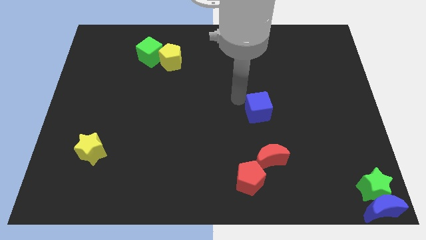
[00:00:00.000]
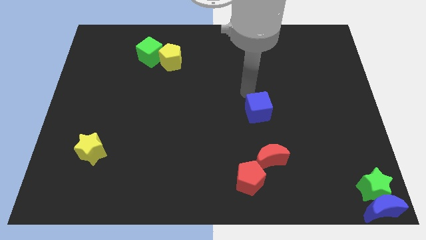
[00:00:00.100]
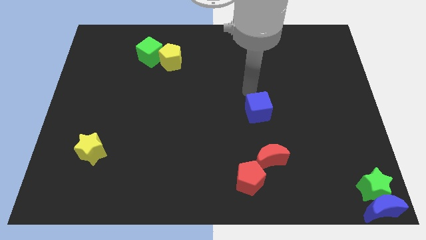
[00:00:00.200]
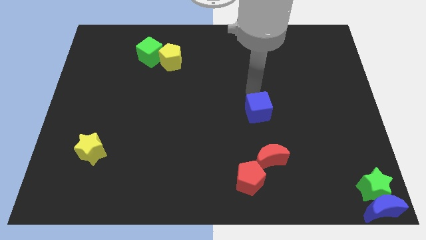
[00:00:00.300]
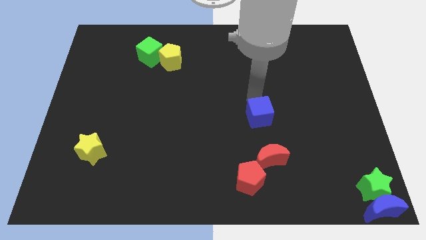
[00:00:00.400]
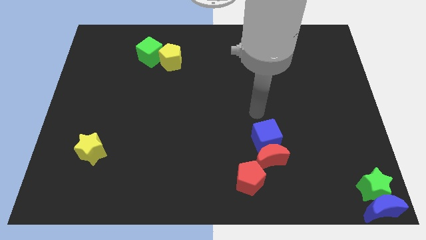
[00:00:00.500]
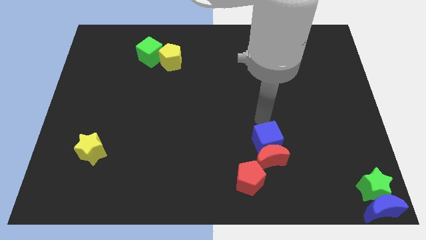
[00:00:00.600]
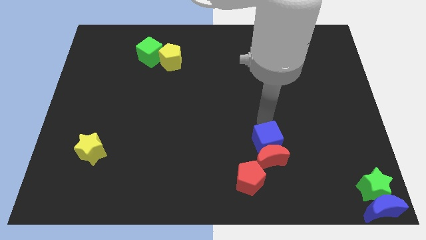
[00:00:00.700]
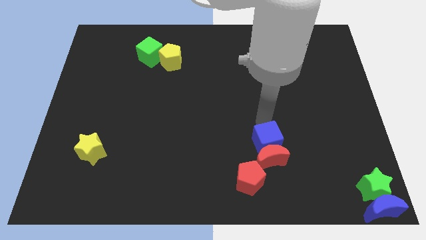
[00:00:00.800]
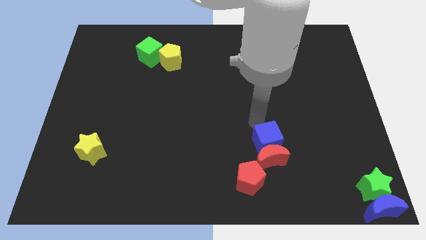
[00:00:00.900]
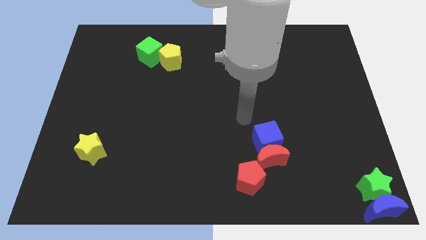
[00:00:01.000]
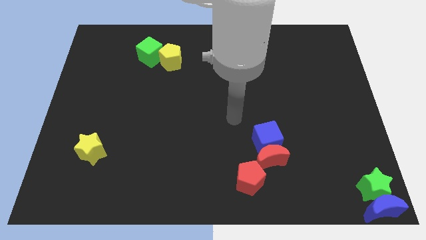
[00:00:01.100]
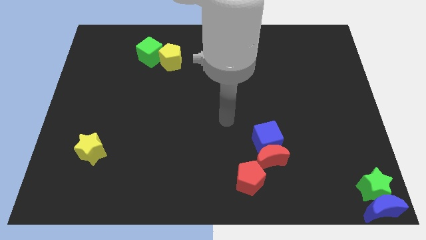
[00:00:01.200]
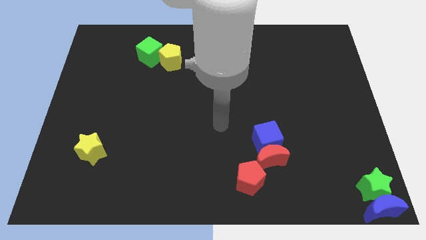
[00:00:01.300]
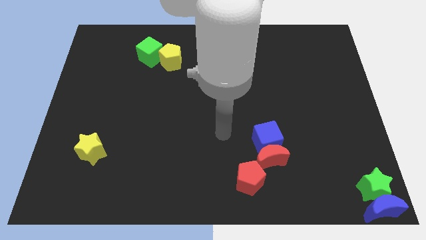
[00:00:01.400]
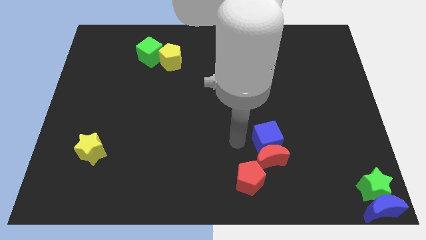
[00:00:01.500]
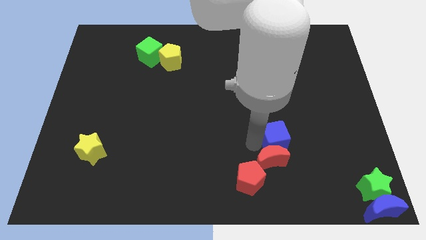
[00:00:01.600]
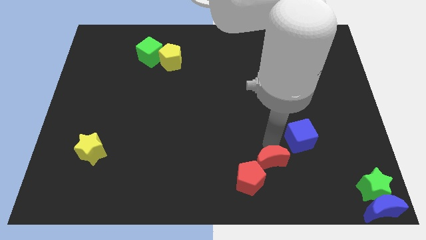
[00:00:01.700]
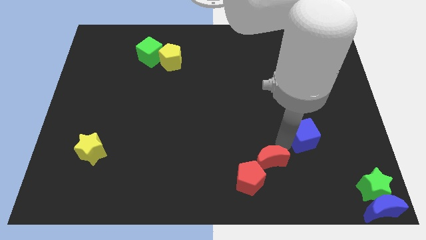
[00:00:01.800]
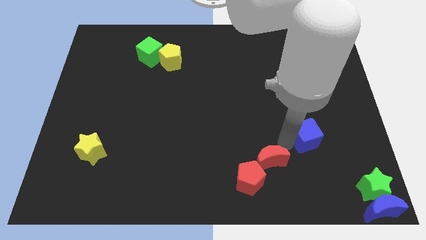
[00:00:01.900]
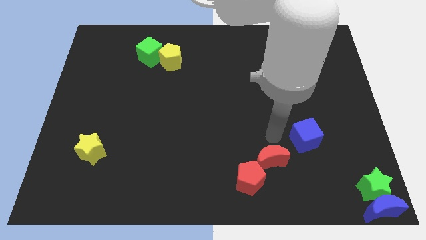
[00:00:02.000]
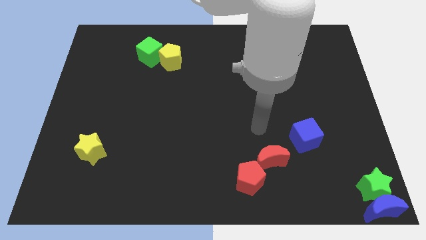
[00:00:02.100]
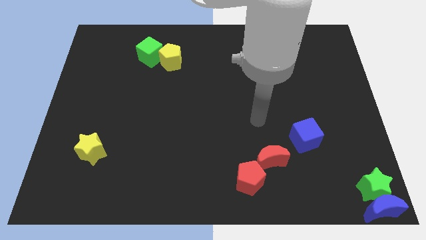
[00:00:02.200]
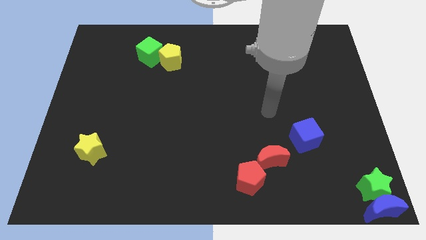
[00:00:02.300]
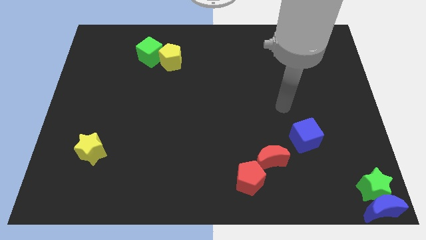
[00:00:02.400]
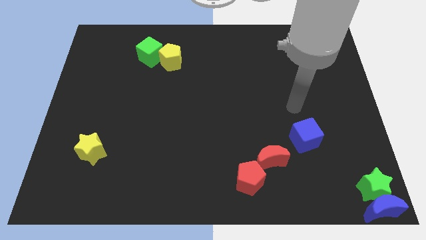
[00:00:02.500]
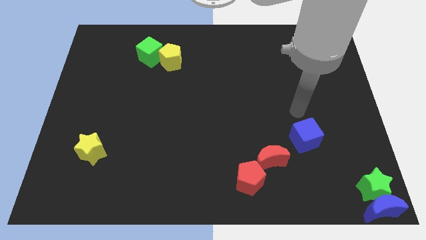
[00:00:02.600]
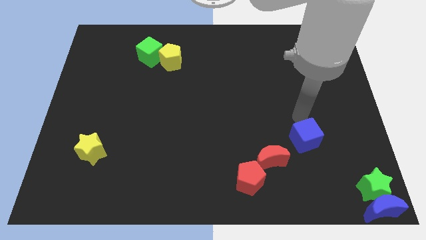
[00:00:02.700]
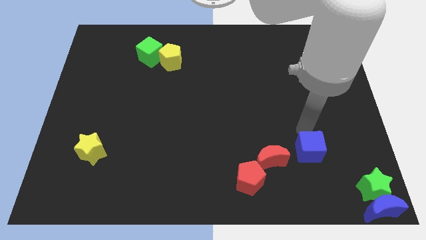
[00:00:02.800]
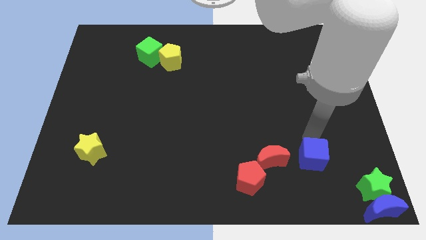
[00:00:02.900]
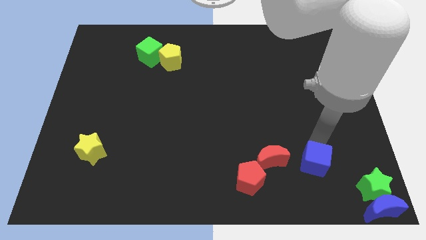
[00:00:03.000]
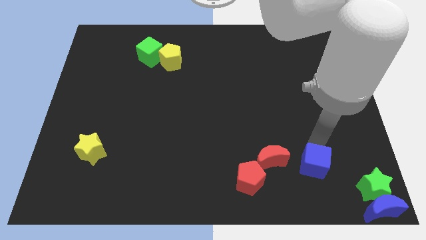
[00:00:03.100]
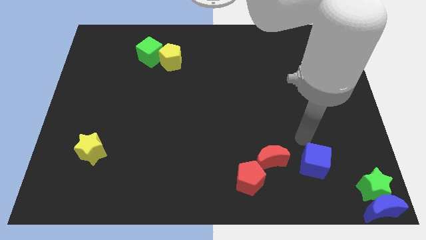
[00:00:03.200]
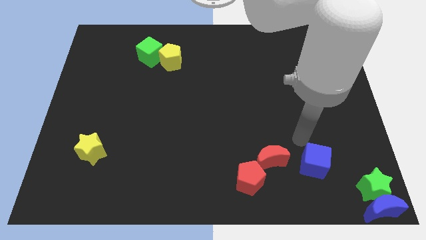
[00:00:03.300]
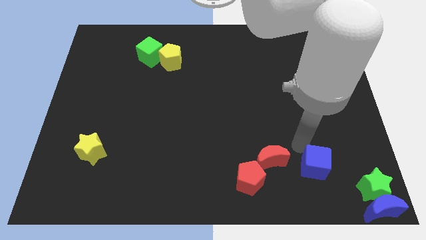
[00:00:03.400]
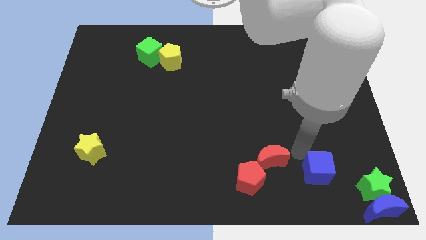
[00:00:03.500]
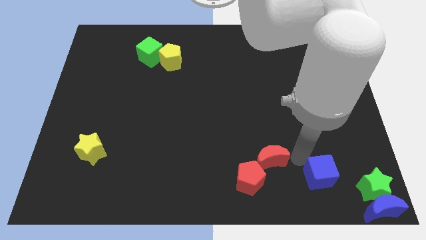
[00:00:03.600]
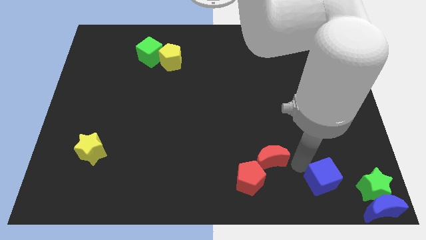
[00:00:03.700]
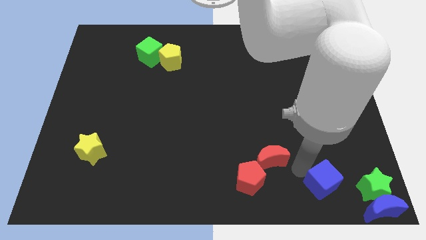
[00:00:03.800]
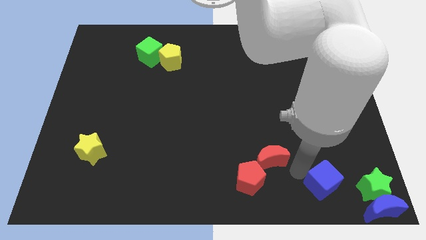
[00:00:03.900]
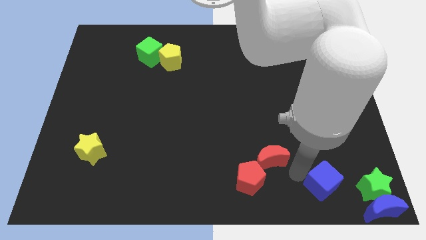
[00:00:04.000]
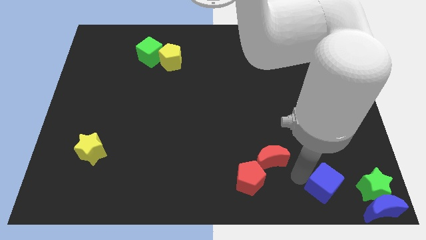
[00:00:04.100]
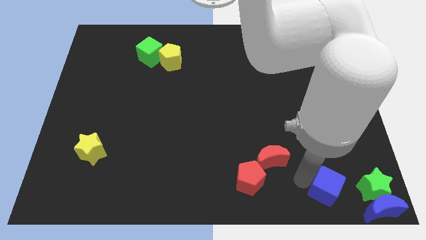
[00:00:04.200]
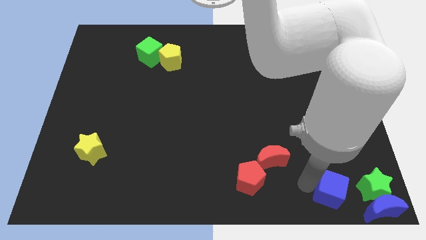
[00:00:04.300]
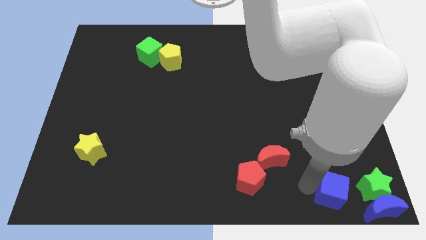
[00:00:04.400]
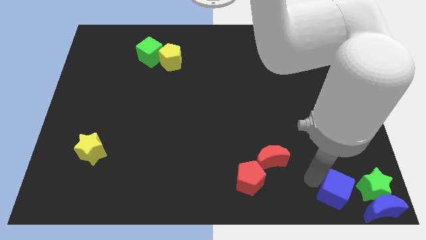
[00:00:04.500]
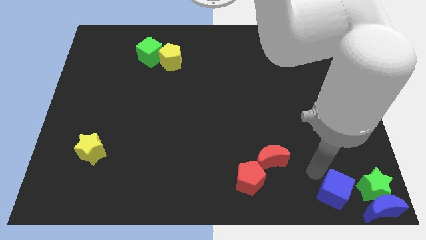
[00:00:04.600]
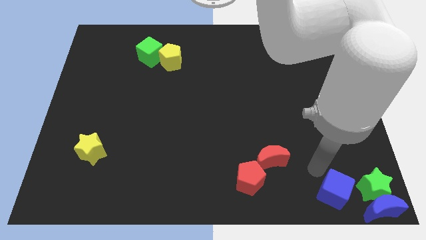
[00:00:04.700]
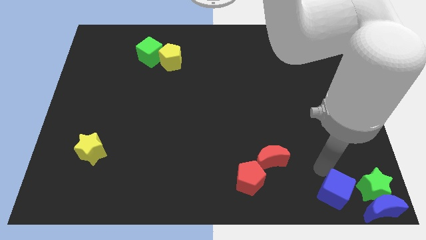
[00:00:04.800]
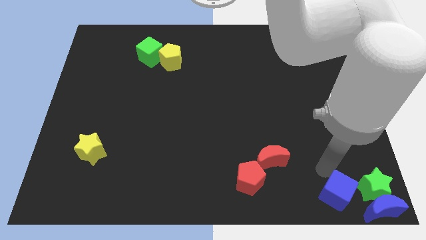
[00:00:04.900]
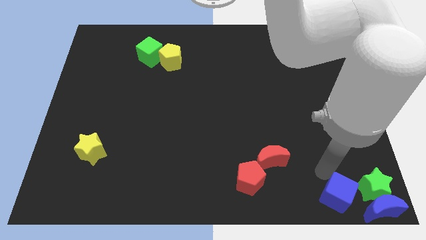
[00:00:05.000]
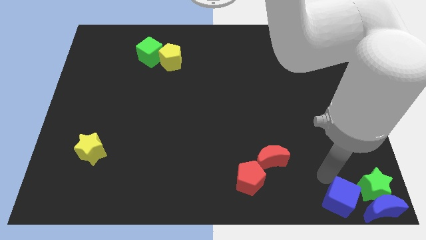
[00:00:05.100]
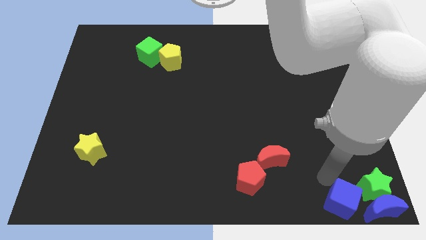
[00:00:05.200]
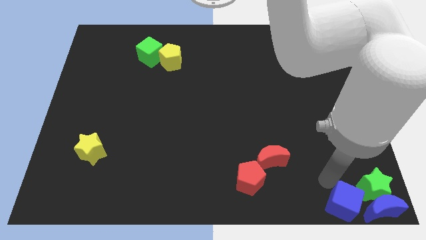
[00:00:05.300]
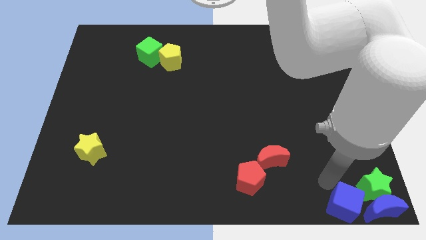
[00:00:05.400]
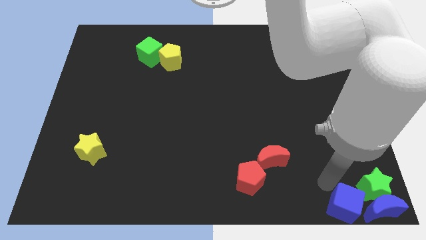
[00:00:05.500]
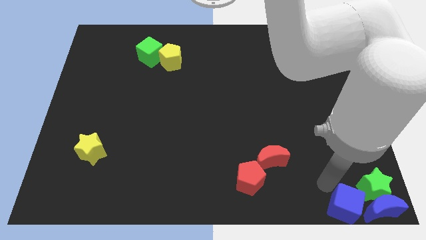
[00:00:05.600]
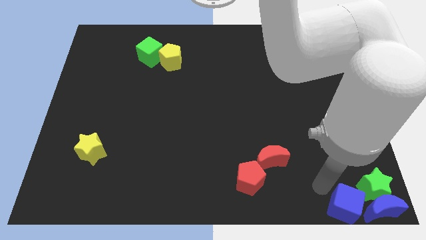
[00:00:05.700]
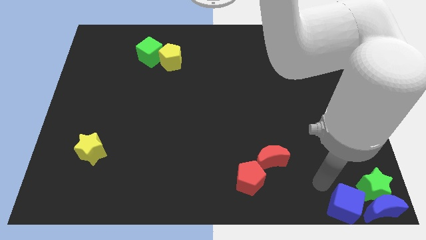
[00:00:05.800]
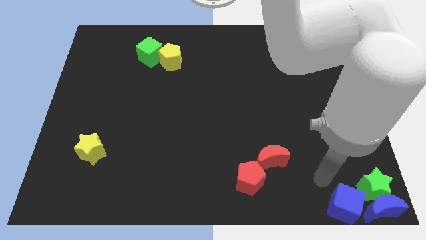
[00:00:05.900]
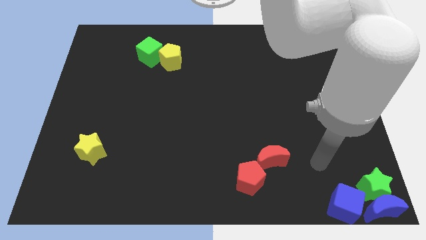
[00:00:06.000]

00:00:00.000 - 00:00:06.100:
put the blue cube towards the bottom right corner

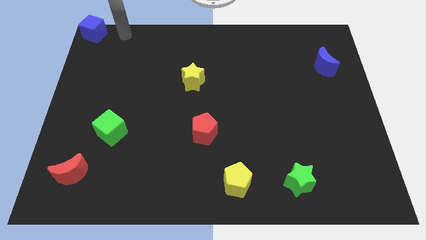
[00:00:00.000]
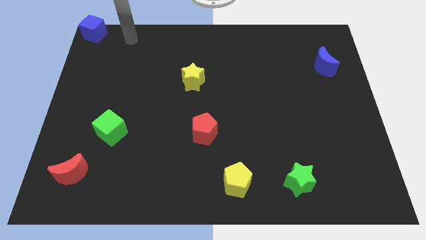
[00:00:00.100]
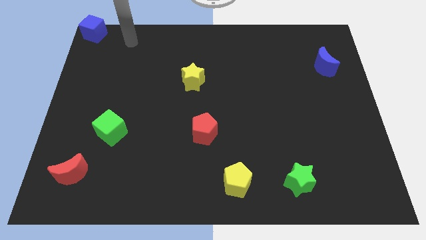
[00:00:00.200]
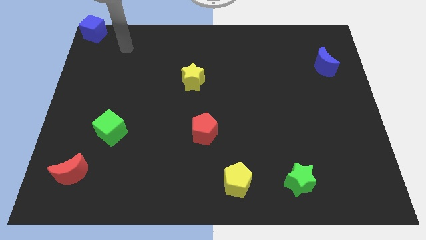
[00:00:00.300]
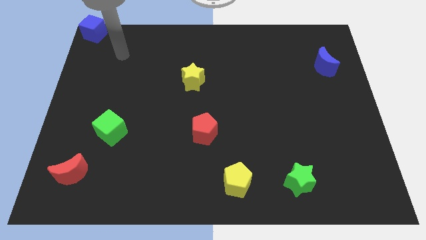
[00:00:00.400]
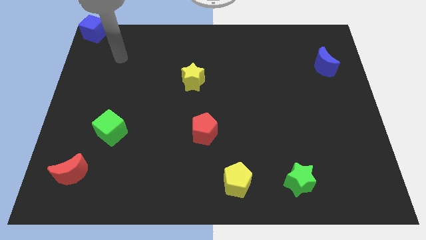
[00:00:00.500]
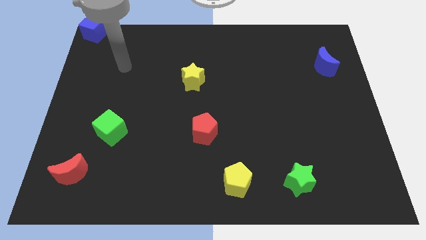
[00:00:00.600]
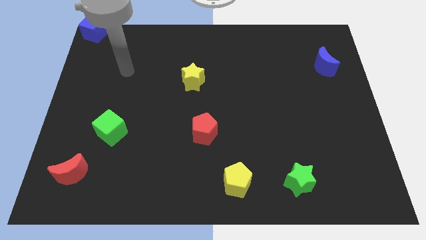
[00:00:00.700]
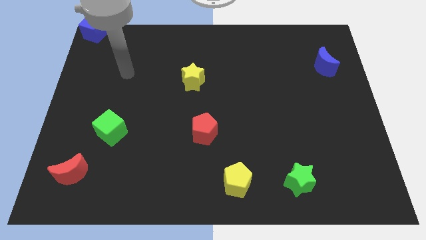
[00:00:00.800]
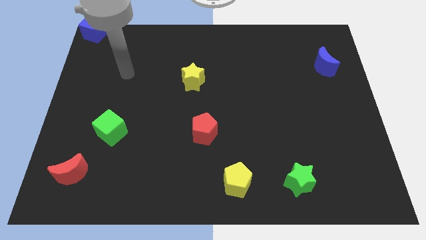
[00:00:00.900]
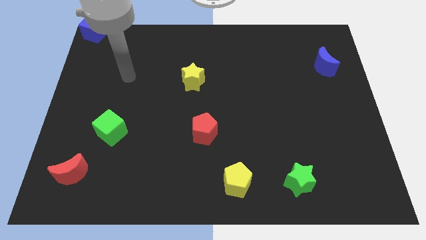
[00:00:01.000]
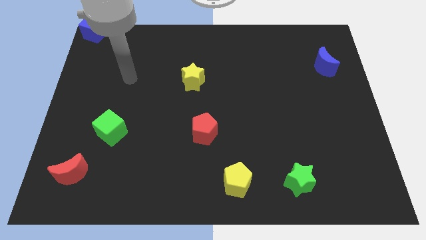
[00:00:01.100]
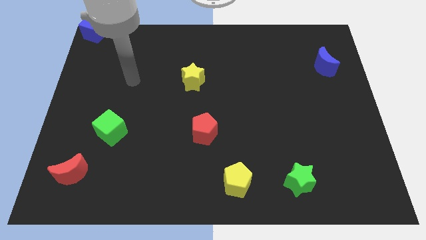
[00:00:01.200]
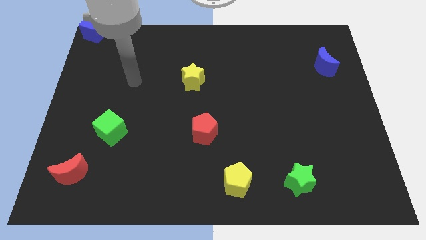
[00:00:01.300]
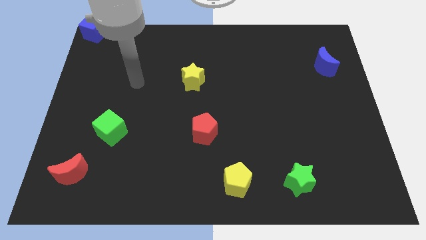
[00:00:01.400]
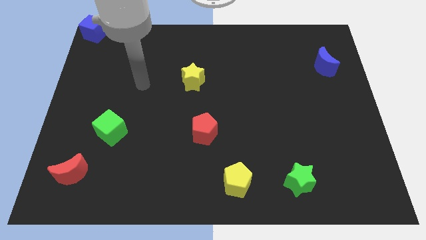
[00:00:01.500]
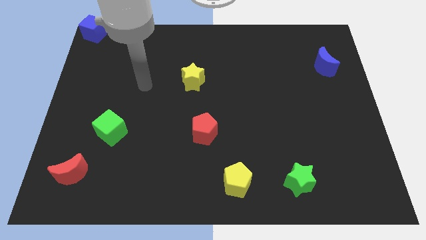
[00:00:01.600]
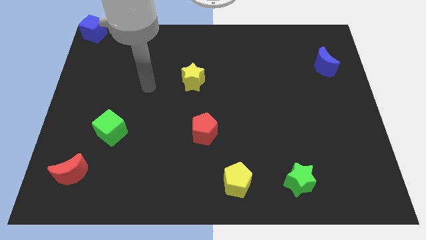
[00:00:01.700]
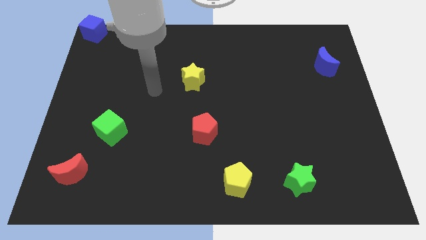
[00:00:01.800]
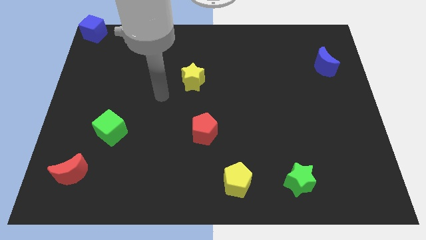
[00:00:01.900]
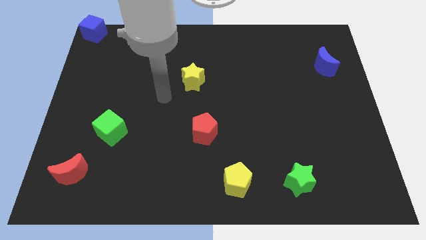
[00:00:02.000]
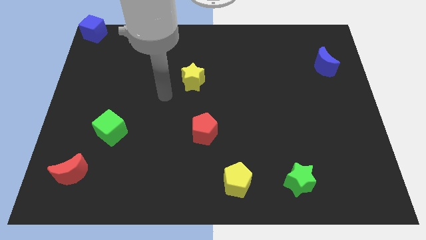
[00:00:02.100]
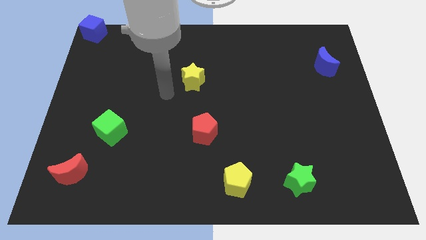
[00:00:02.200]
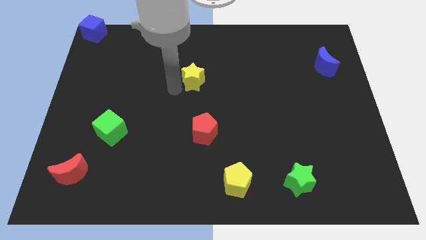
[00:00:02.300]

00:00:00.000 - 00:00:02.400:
point the arm at the left side of the yellow star

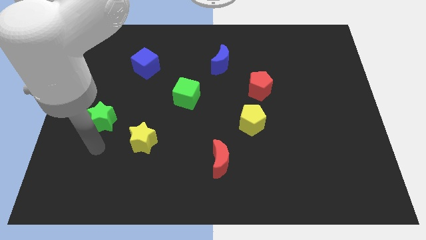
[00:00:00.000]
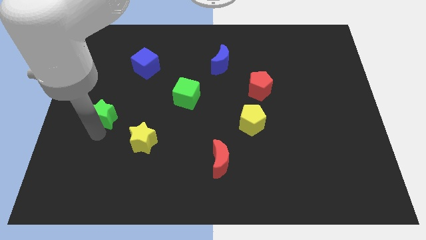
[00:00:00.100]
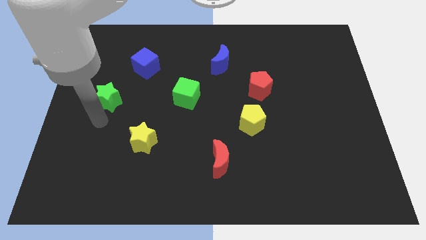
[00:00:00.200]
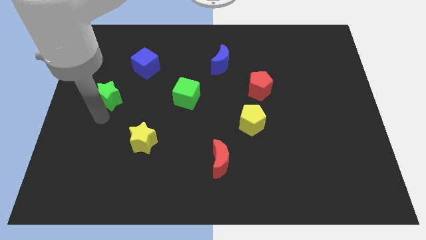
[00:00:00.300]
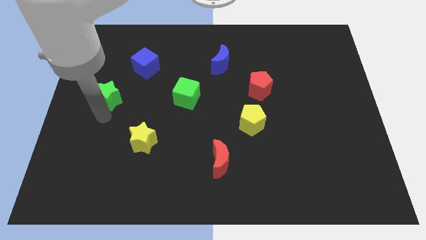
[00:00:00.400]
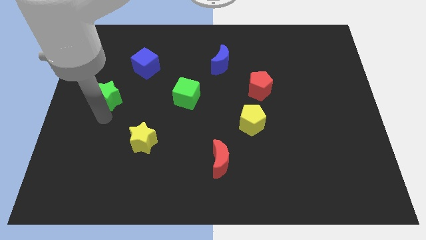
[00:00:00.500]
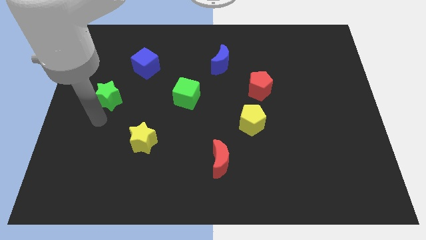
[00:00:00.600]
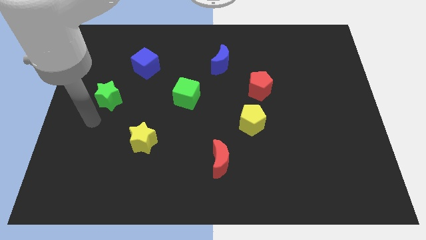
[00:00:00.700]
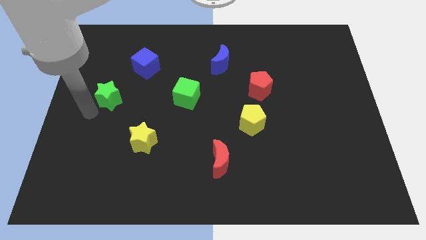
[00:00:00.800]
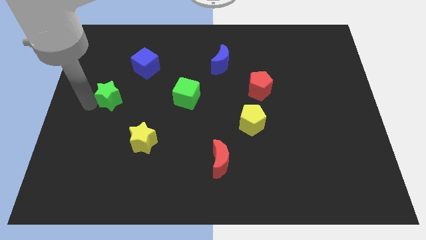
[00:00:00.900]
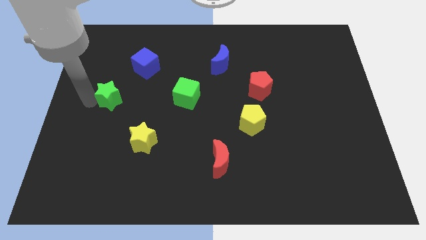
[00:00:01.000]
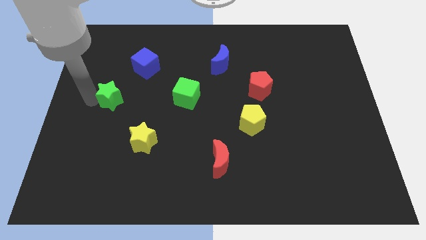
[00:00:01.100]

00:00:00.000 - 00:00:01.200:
move green star diagonally left of the blue cube
